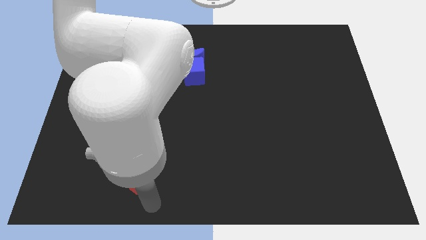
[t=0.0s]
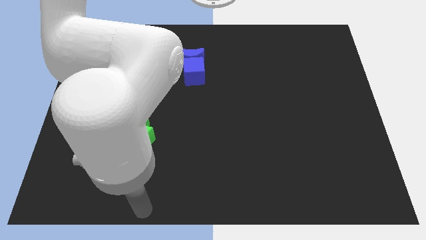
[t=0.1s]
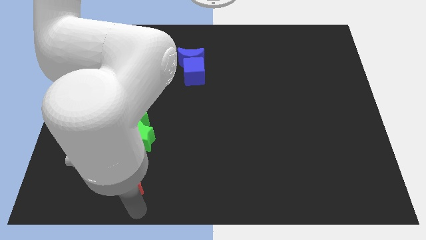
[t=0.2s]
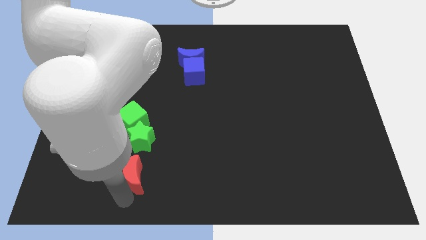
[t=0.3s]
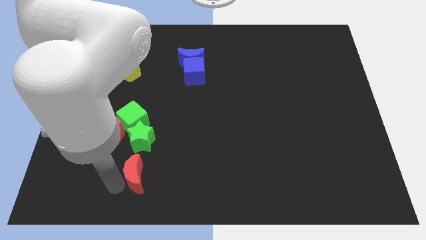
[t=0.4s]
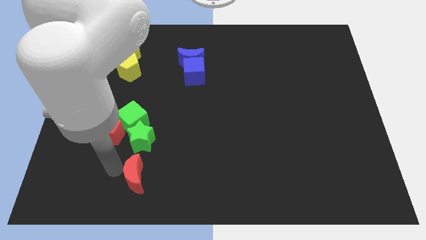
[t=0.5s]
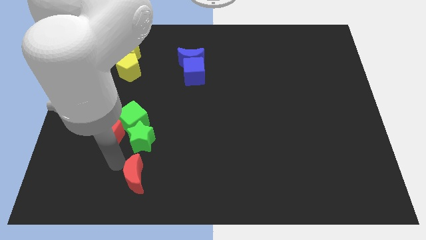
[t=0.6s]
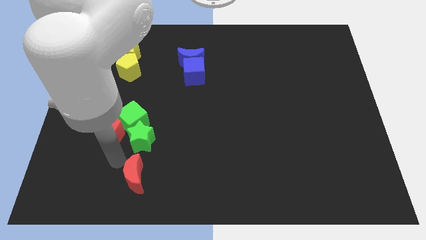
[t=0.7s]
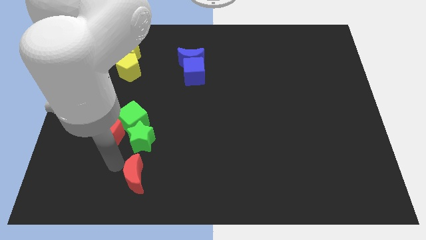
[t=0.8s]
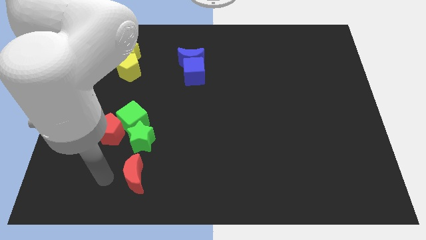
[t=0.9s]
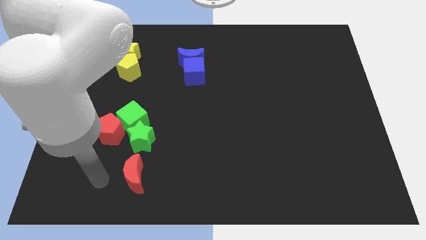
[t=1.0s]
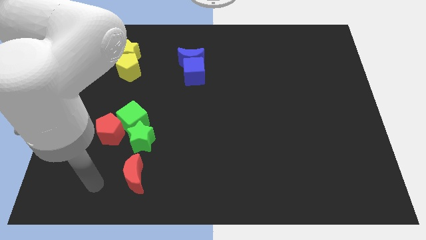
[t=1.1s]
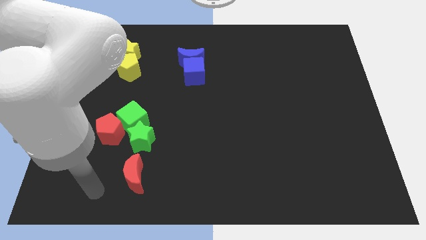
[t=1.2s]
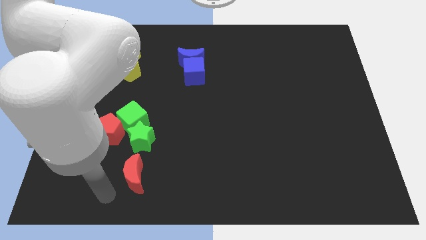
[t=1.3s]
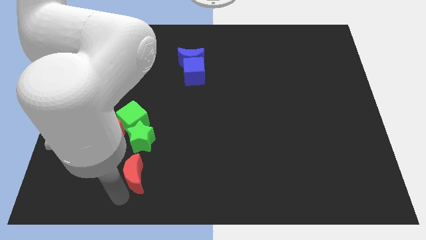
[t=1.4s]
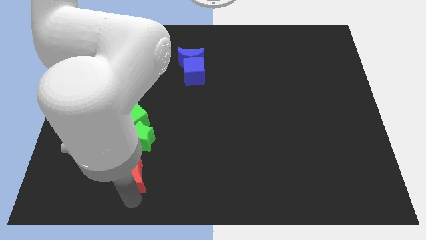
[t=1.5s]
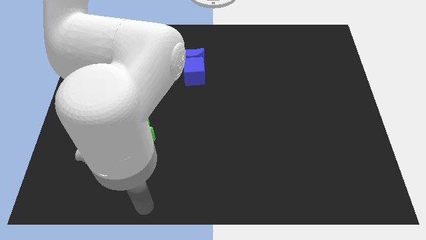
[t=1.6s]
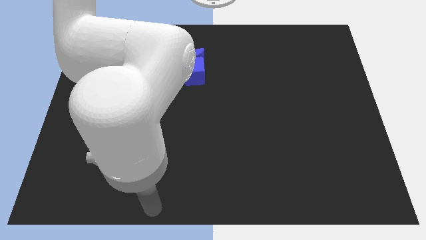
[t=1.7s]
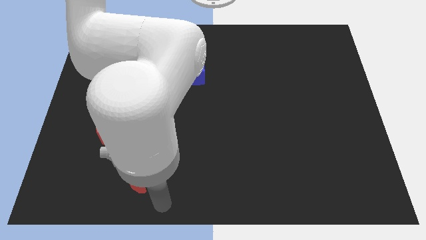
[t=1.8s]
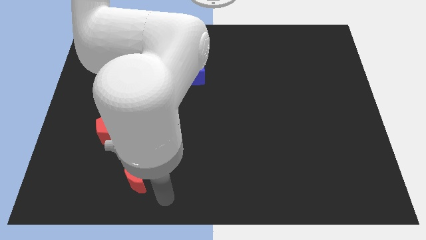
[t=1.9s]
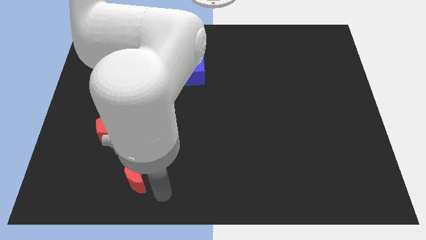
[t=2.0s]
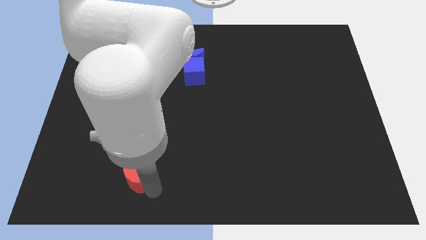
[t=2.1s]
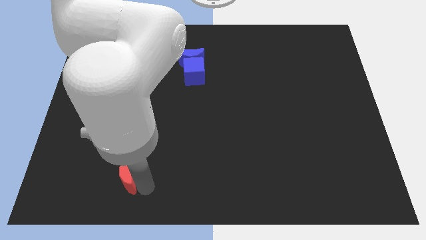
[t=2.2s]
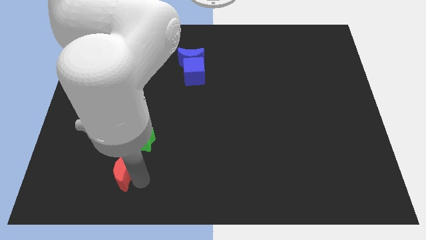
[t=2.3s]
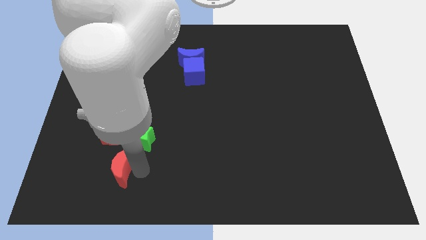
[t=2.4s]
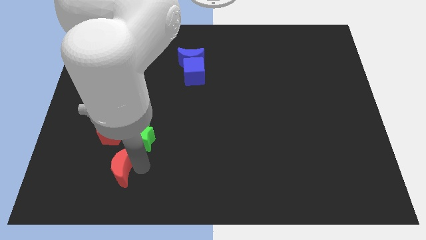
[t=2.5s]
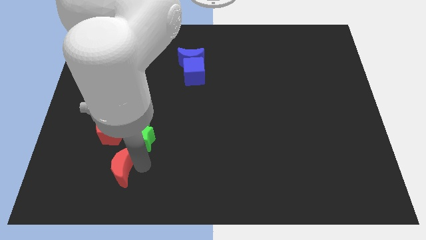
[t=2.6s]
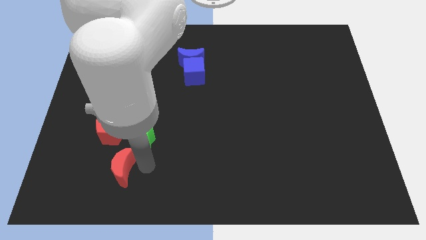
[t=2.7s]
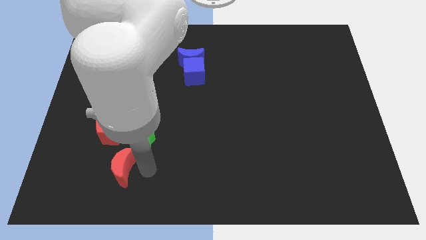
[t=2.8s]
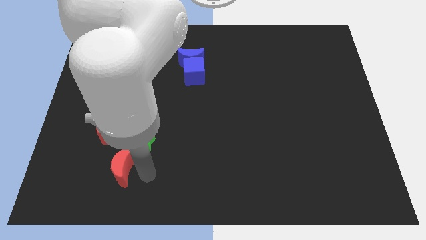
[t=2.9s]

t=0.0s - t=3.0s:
move the red crescent towards the red pentagon

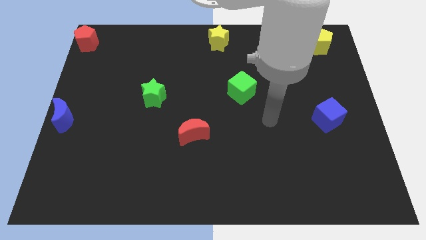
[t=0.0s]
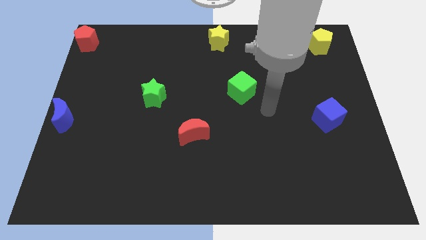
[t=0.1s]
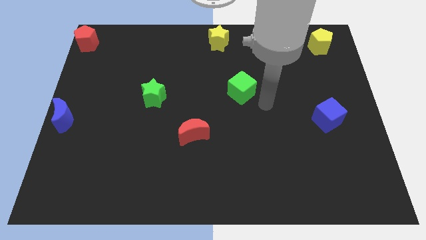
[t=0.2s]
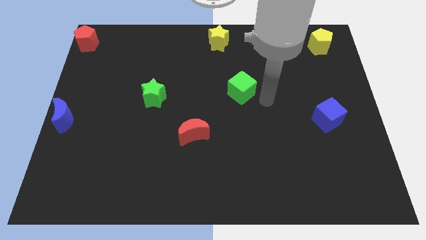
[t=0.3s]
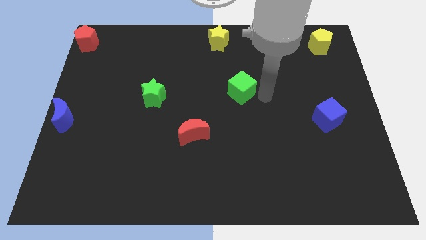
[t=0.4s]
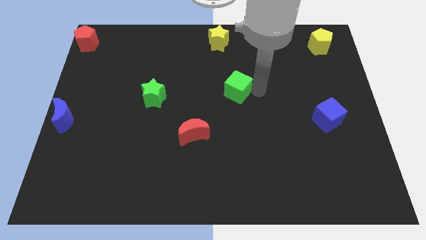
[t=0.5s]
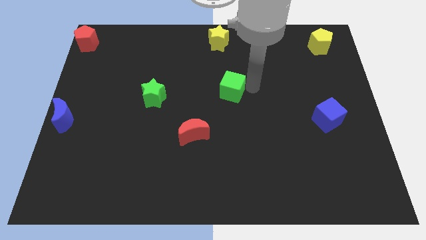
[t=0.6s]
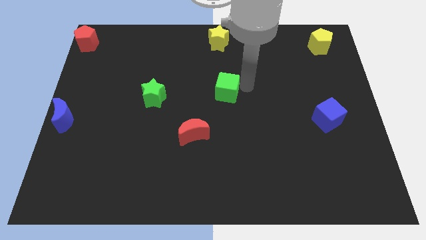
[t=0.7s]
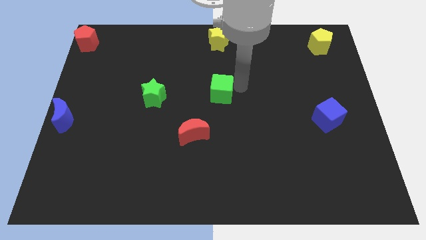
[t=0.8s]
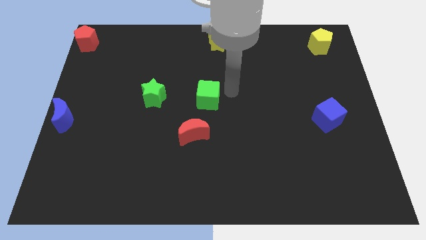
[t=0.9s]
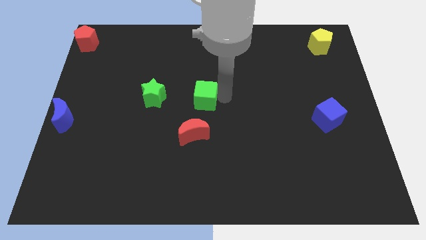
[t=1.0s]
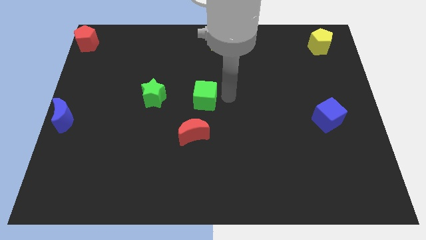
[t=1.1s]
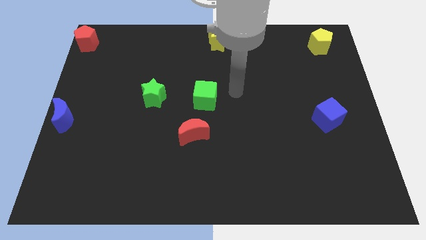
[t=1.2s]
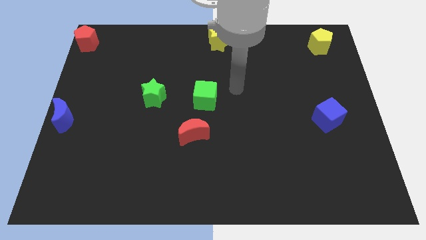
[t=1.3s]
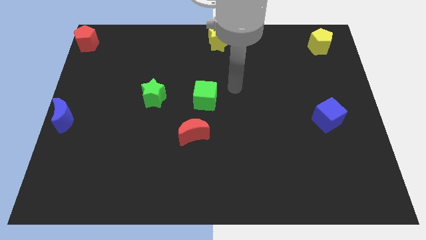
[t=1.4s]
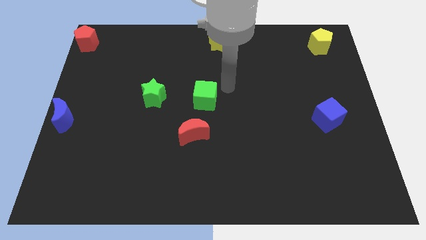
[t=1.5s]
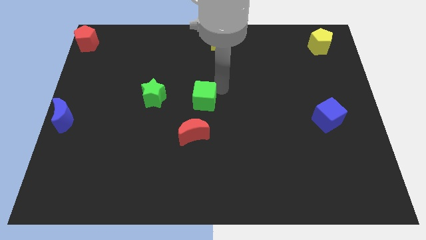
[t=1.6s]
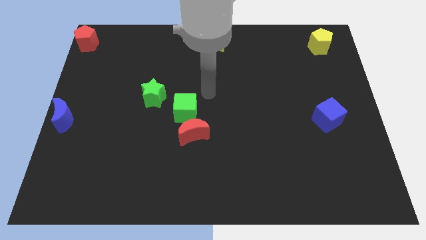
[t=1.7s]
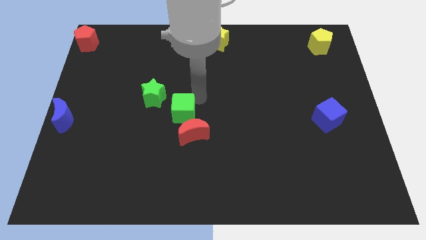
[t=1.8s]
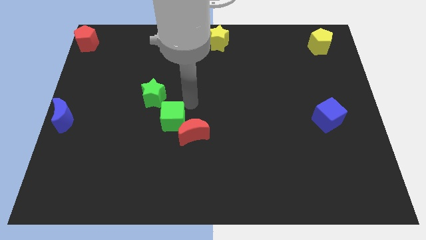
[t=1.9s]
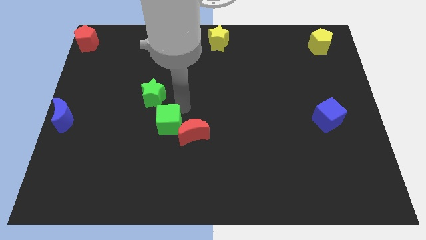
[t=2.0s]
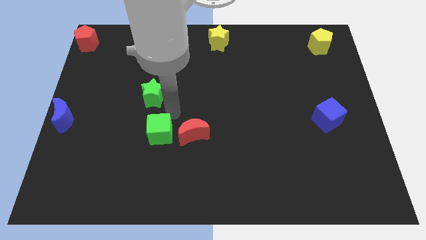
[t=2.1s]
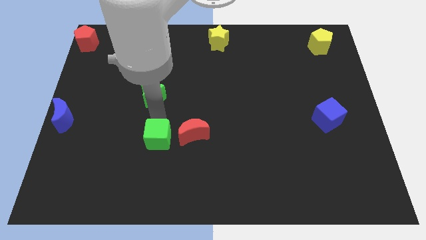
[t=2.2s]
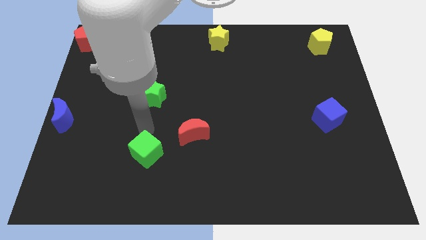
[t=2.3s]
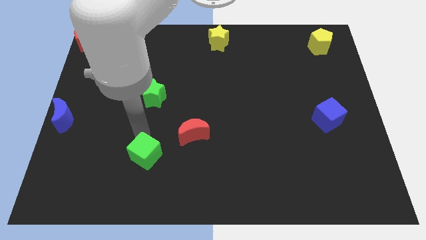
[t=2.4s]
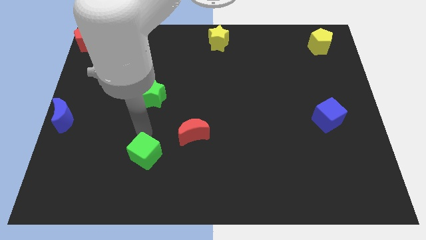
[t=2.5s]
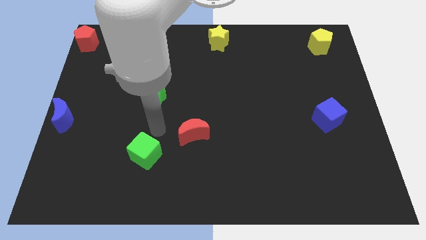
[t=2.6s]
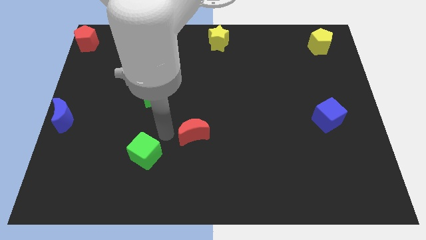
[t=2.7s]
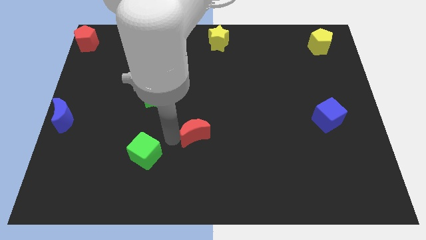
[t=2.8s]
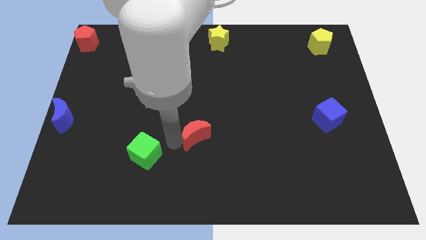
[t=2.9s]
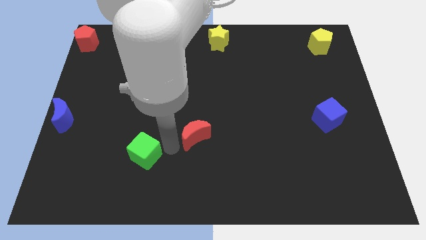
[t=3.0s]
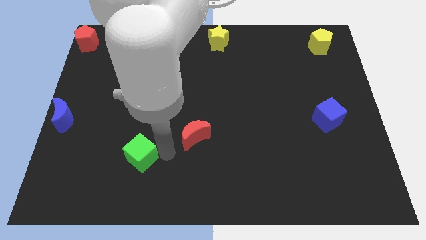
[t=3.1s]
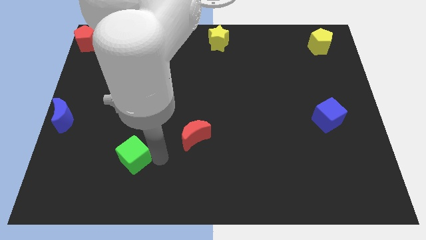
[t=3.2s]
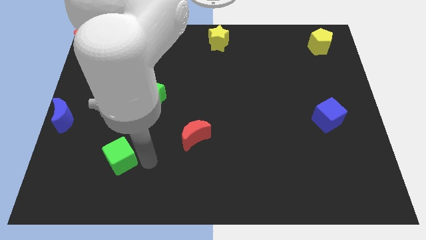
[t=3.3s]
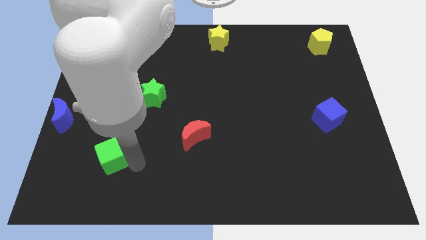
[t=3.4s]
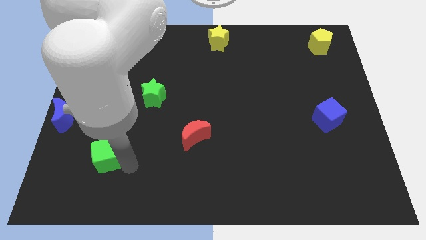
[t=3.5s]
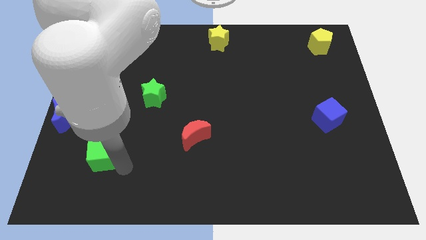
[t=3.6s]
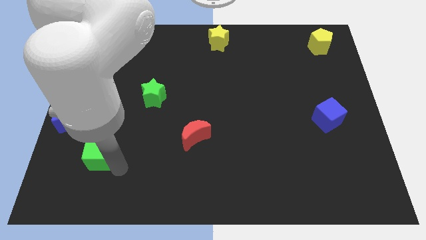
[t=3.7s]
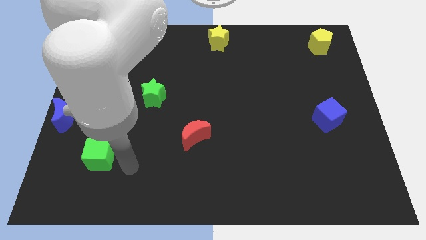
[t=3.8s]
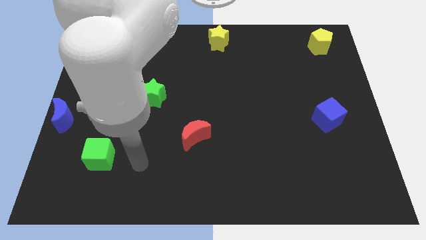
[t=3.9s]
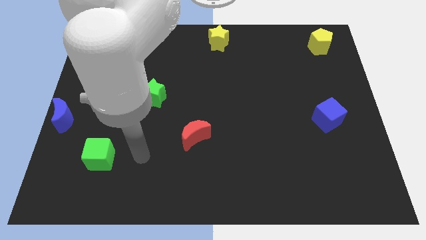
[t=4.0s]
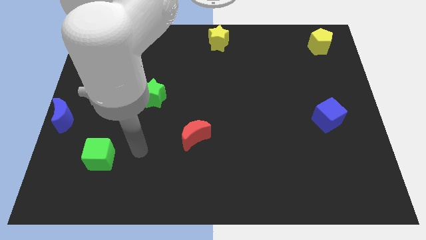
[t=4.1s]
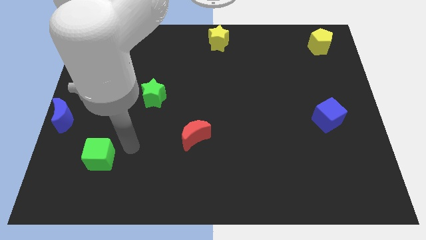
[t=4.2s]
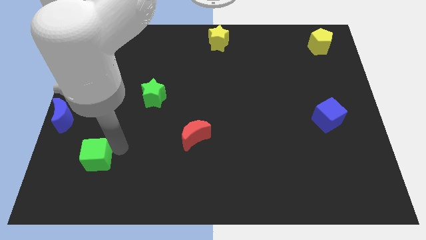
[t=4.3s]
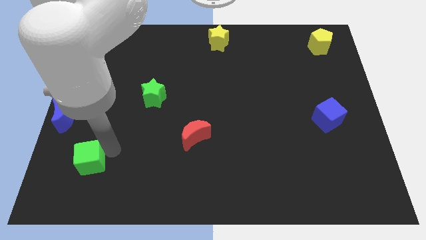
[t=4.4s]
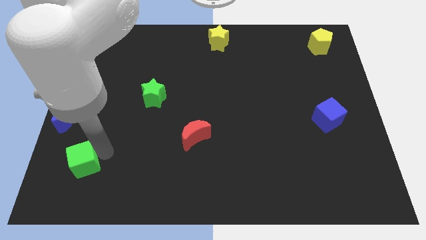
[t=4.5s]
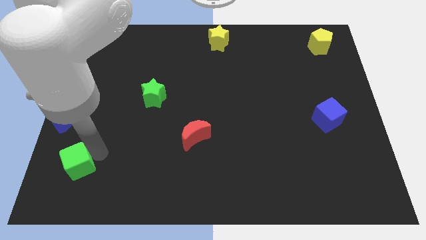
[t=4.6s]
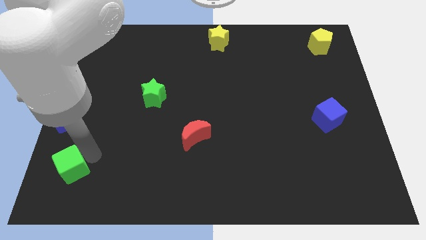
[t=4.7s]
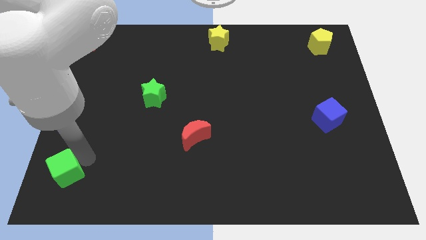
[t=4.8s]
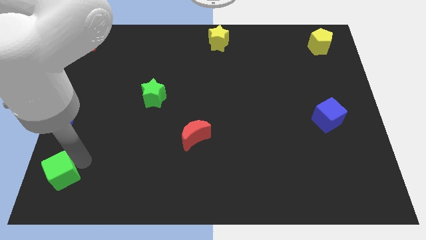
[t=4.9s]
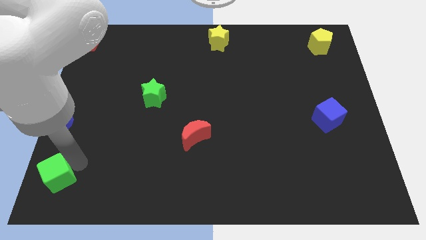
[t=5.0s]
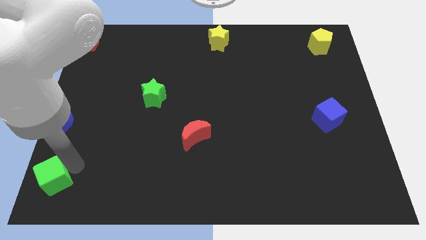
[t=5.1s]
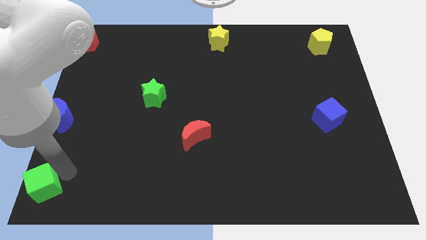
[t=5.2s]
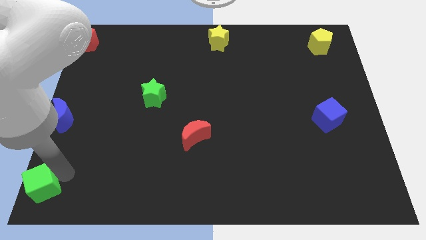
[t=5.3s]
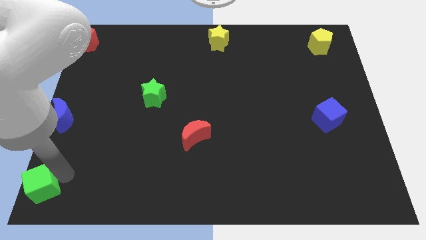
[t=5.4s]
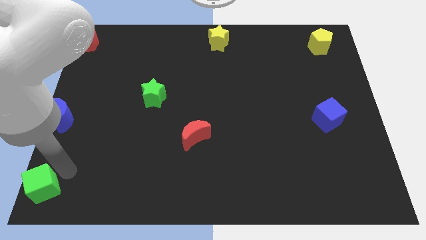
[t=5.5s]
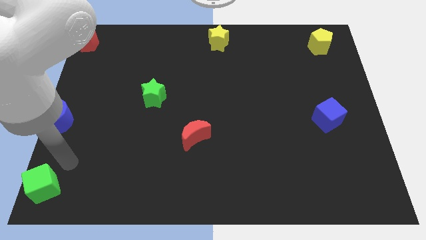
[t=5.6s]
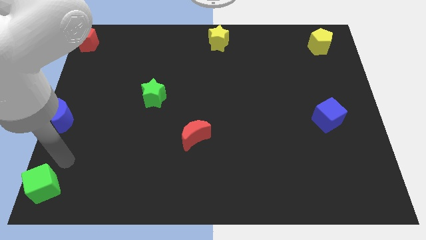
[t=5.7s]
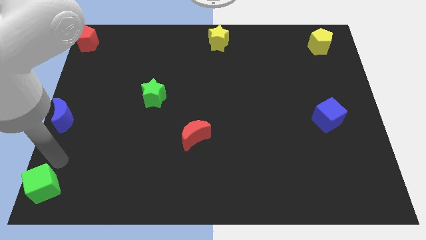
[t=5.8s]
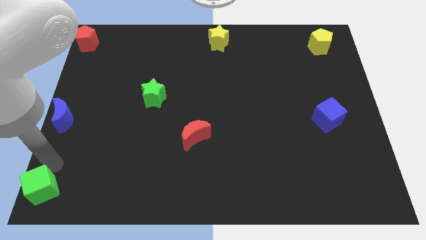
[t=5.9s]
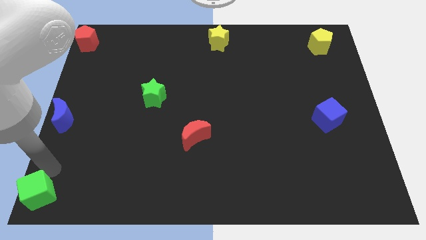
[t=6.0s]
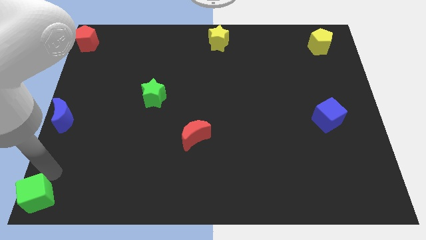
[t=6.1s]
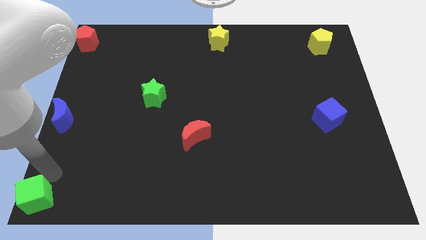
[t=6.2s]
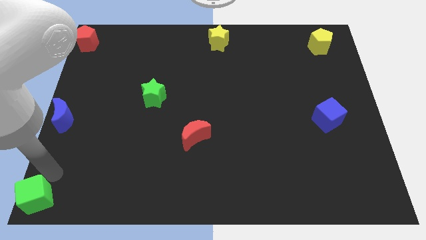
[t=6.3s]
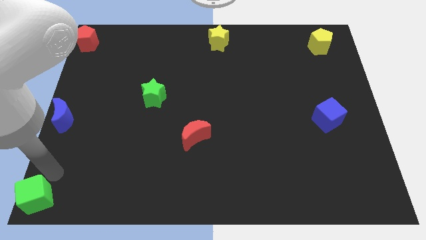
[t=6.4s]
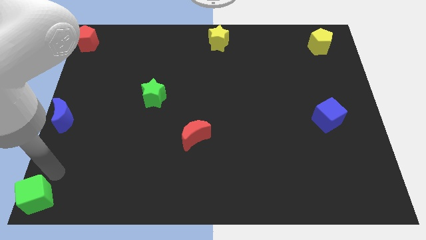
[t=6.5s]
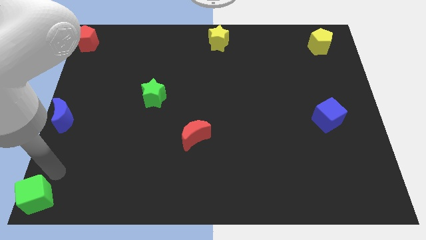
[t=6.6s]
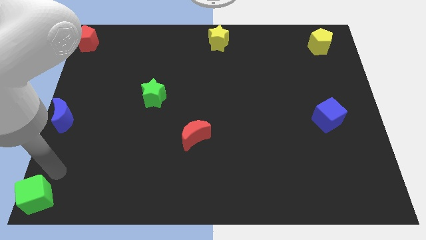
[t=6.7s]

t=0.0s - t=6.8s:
place the green cube at the bottom left corner of the board
